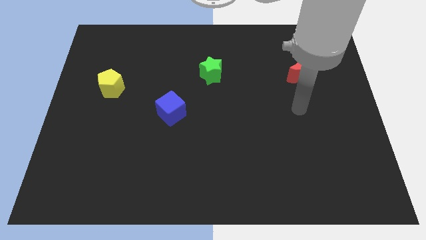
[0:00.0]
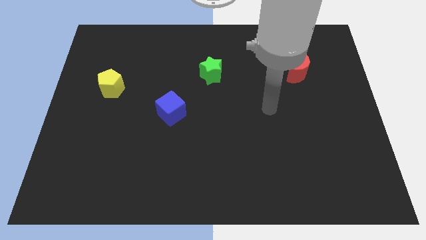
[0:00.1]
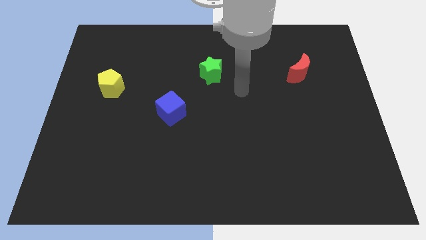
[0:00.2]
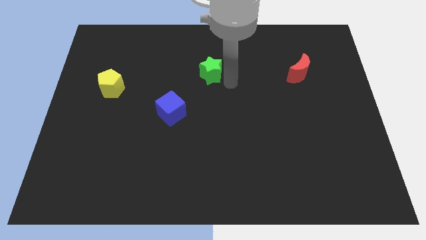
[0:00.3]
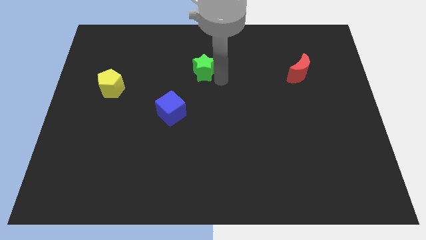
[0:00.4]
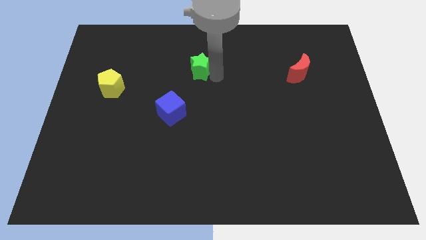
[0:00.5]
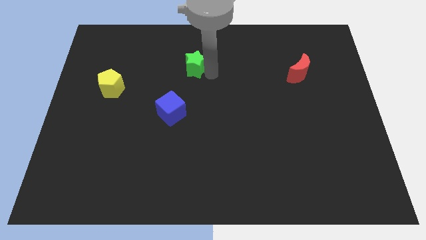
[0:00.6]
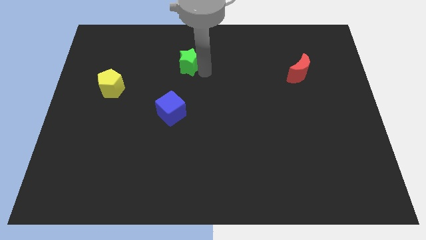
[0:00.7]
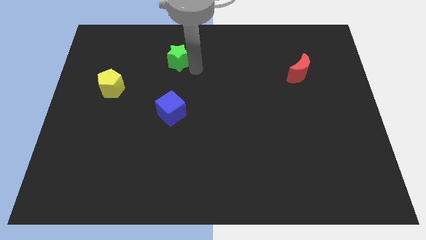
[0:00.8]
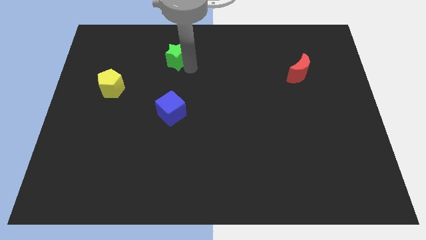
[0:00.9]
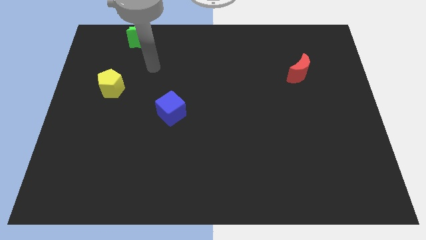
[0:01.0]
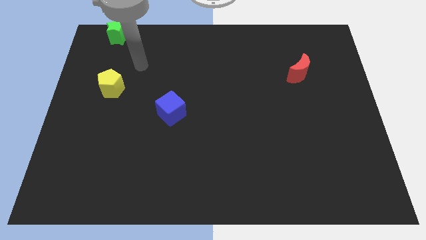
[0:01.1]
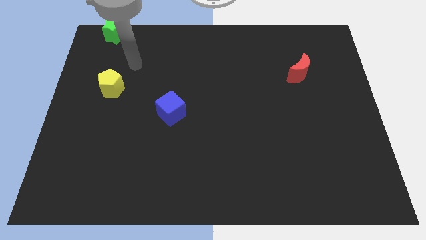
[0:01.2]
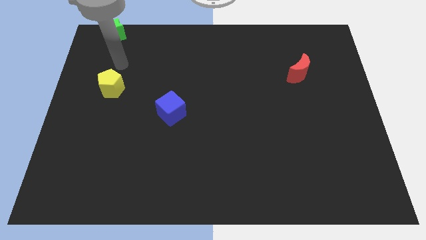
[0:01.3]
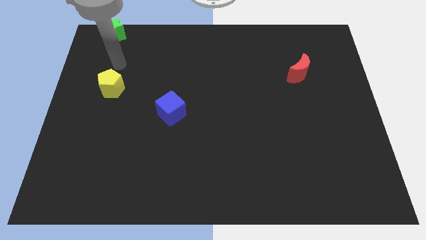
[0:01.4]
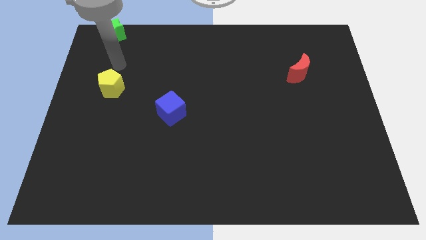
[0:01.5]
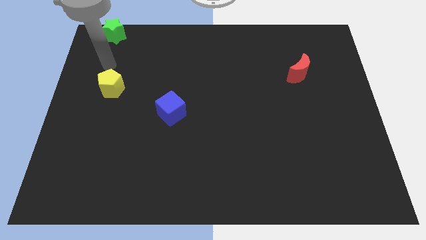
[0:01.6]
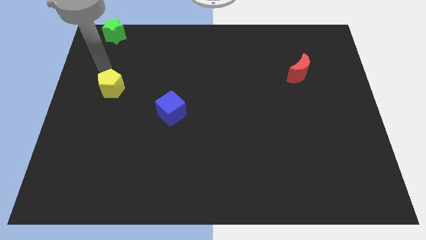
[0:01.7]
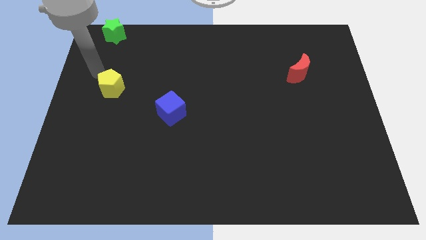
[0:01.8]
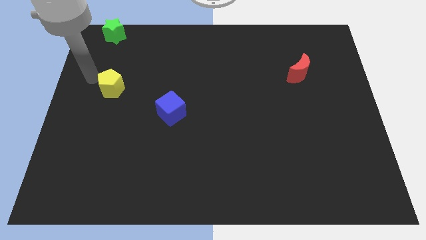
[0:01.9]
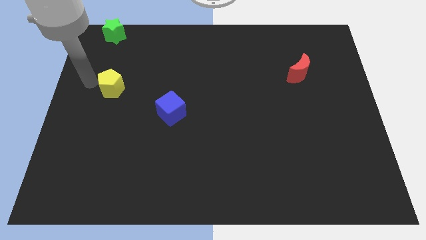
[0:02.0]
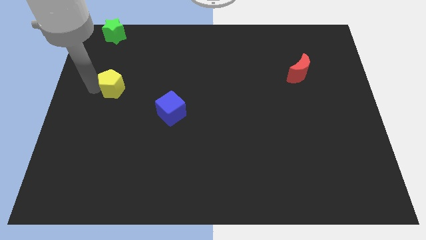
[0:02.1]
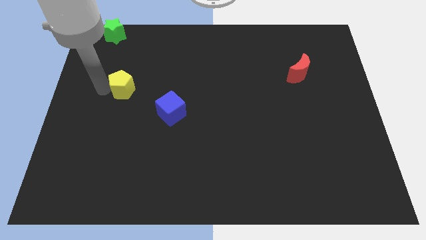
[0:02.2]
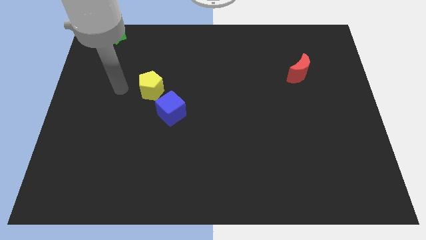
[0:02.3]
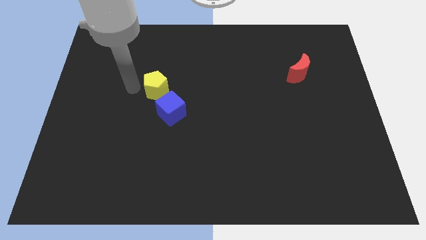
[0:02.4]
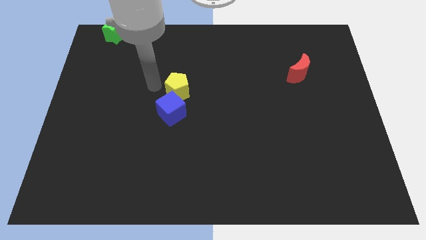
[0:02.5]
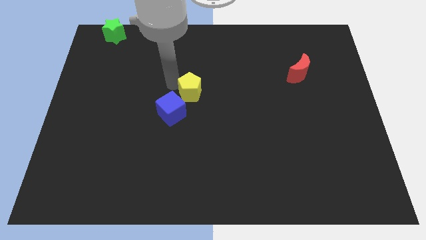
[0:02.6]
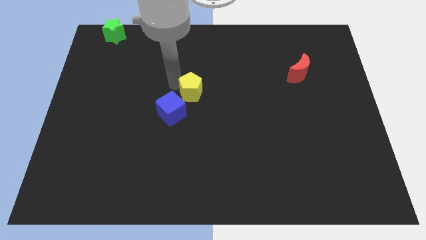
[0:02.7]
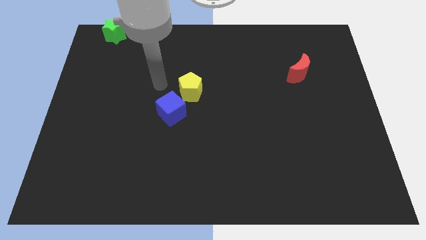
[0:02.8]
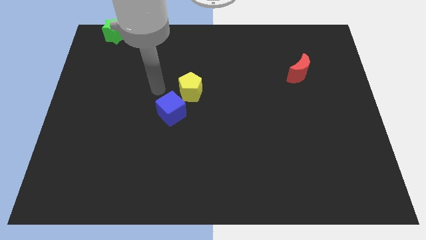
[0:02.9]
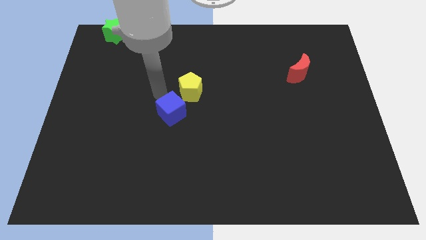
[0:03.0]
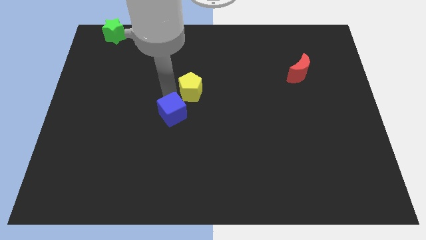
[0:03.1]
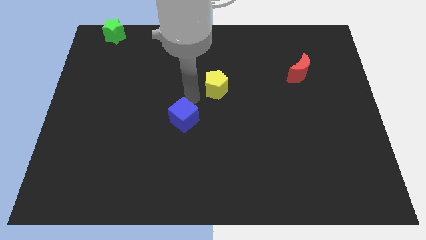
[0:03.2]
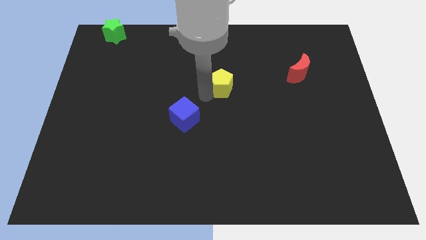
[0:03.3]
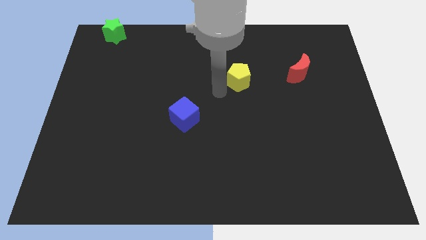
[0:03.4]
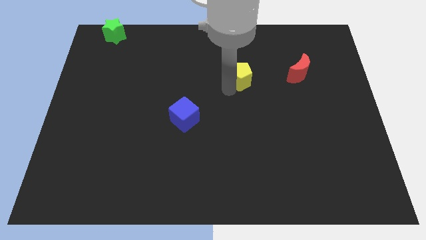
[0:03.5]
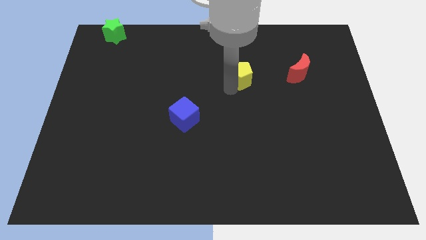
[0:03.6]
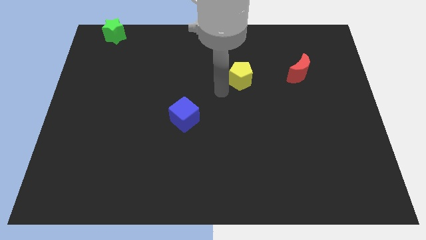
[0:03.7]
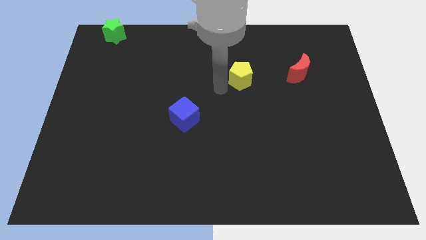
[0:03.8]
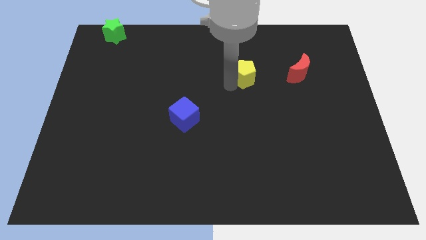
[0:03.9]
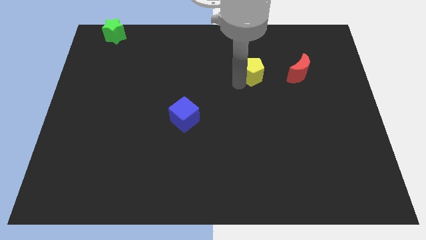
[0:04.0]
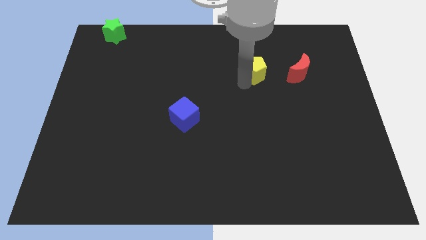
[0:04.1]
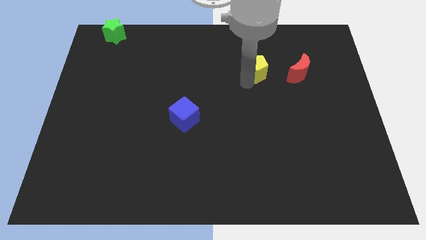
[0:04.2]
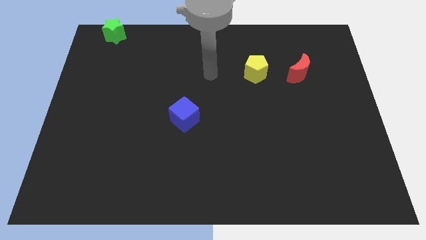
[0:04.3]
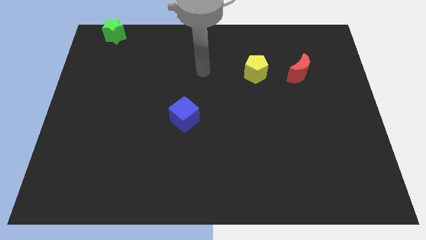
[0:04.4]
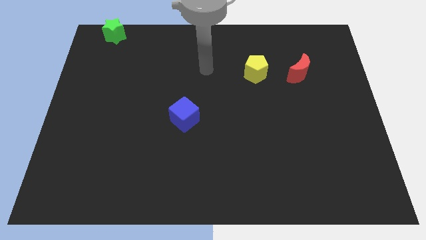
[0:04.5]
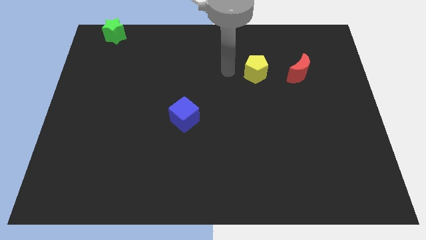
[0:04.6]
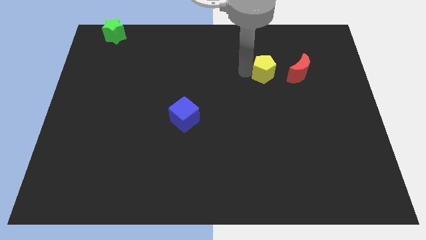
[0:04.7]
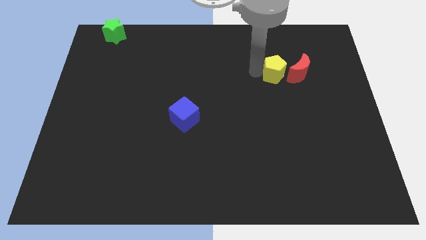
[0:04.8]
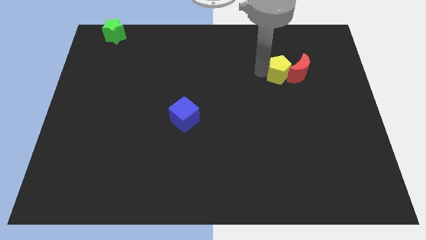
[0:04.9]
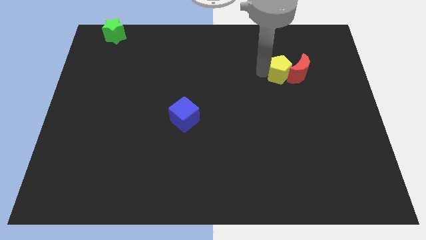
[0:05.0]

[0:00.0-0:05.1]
slide the pentagon to the red block

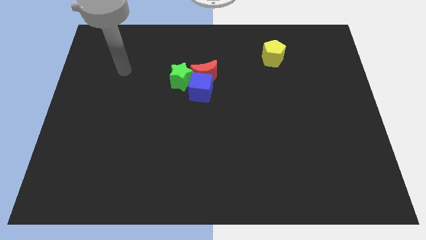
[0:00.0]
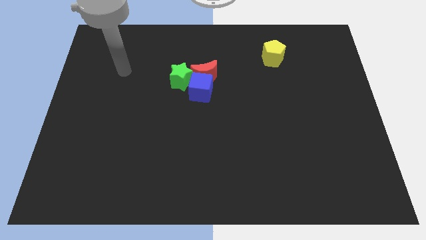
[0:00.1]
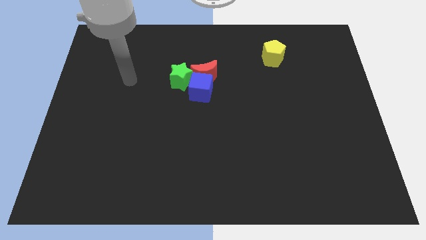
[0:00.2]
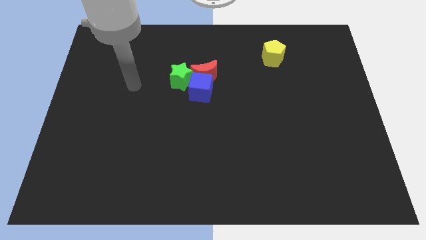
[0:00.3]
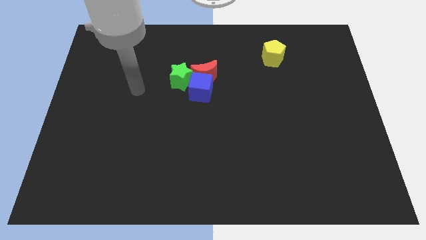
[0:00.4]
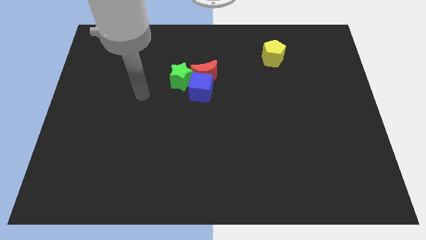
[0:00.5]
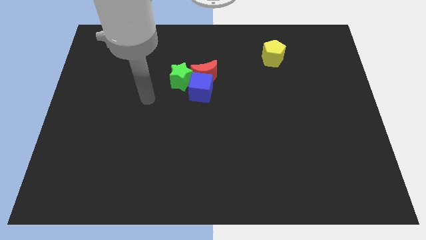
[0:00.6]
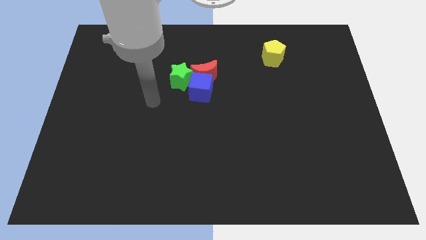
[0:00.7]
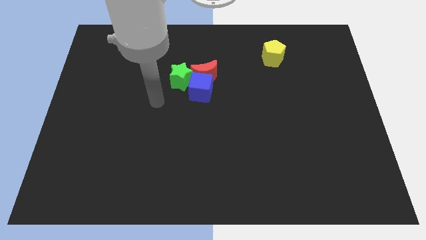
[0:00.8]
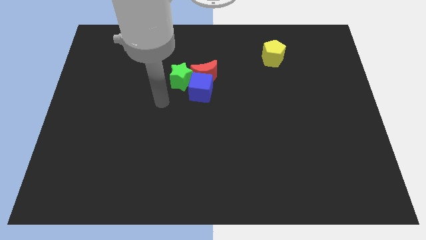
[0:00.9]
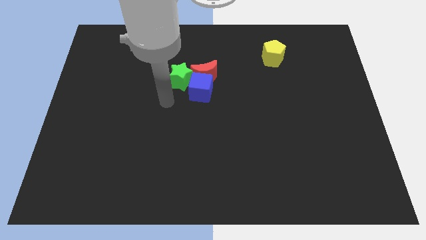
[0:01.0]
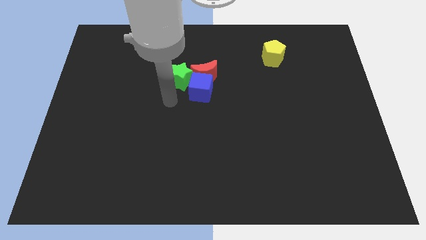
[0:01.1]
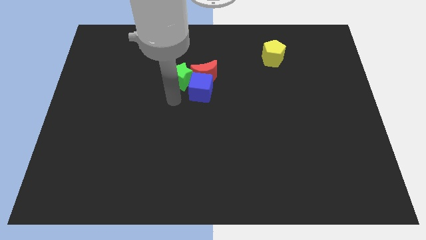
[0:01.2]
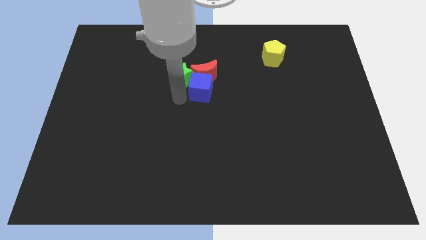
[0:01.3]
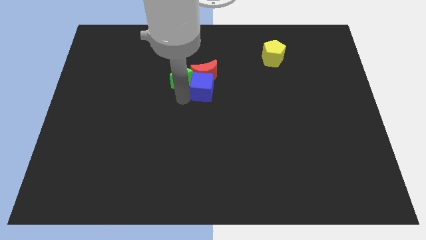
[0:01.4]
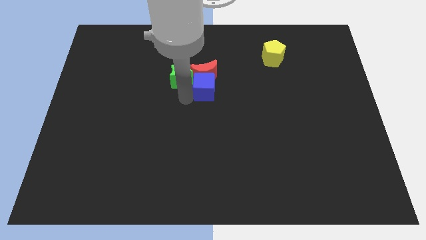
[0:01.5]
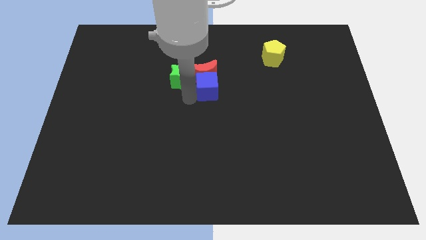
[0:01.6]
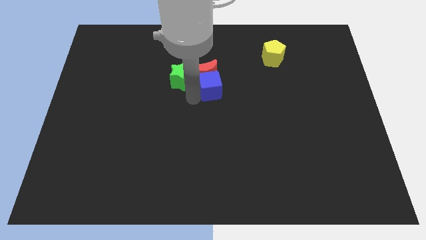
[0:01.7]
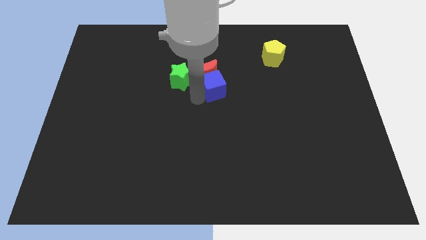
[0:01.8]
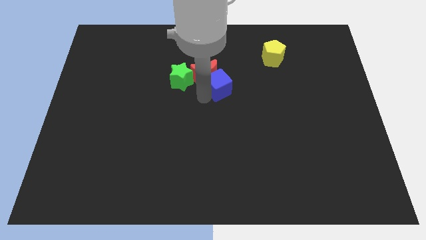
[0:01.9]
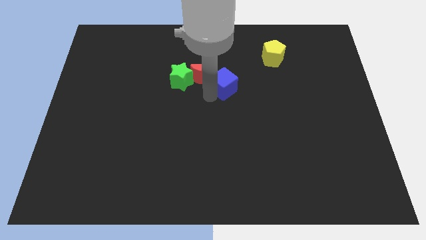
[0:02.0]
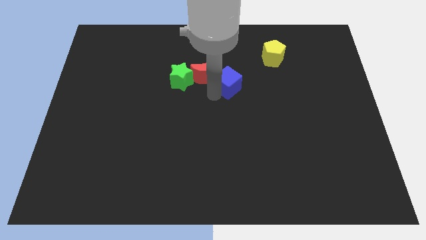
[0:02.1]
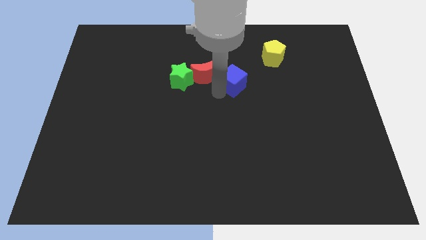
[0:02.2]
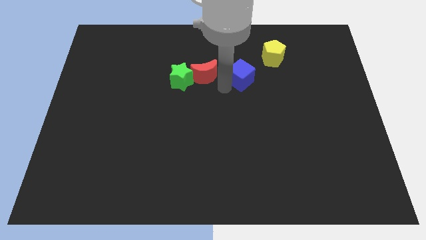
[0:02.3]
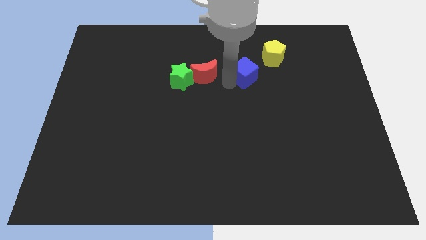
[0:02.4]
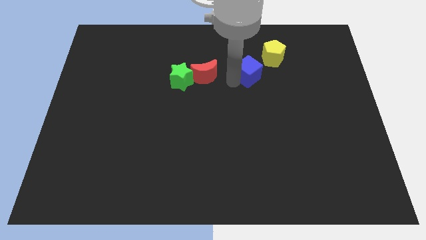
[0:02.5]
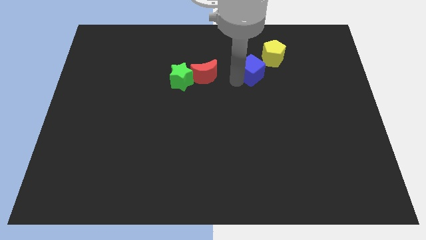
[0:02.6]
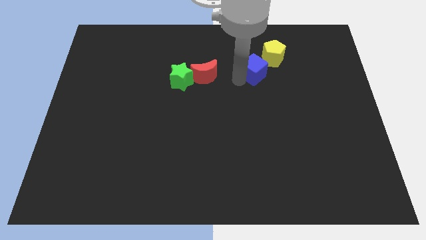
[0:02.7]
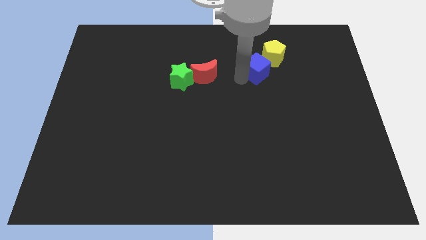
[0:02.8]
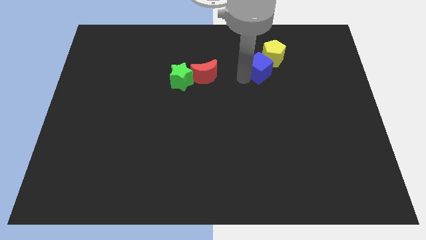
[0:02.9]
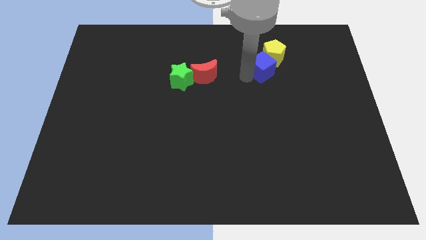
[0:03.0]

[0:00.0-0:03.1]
put the cube close to the pentagon

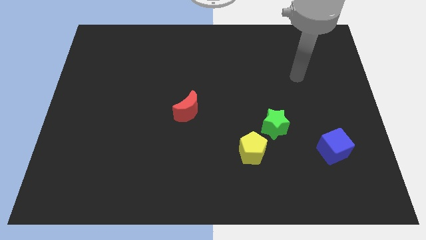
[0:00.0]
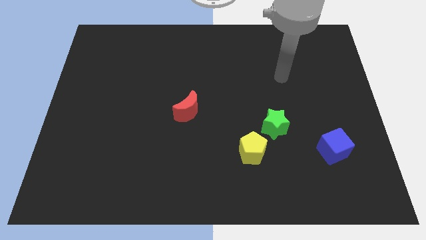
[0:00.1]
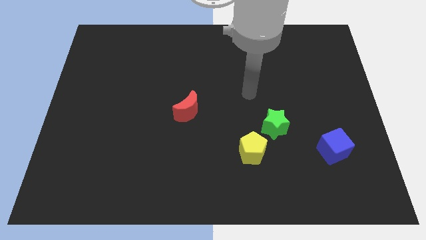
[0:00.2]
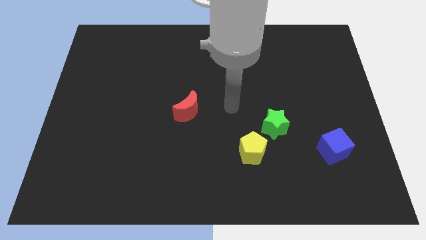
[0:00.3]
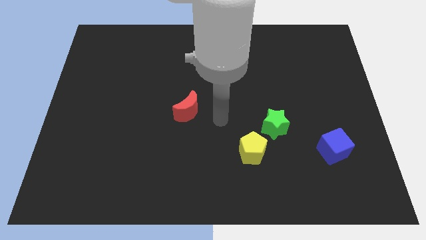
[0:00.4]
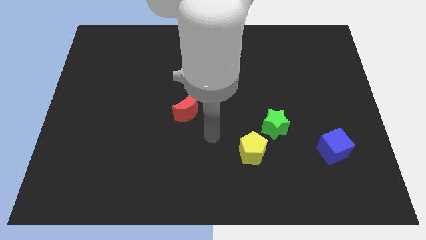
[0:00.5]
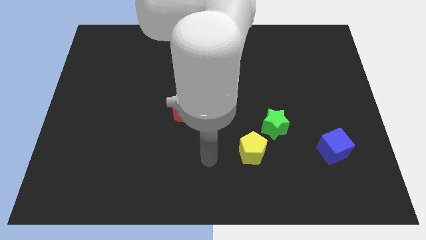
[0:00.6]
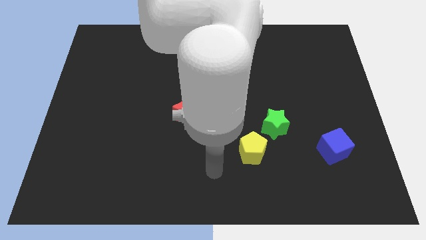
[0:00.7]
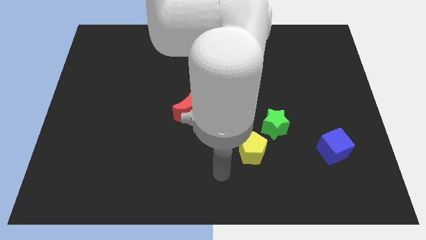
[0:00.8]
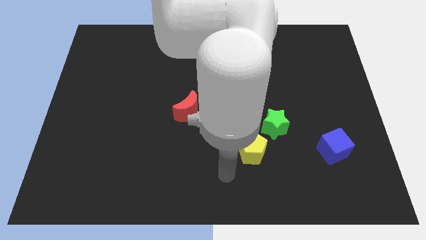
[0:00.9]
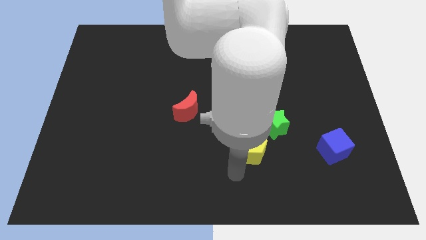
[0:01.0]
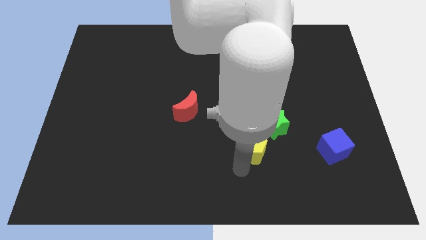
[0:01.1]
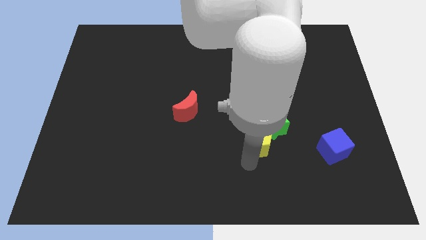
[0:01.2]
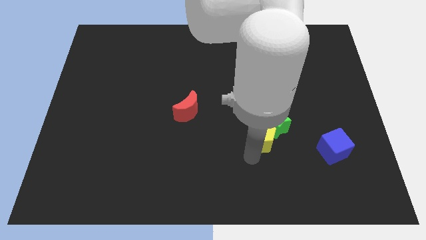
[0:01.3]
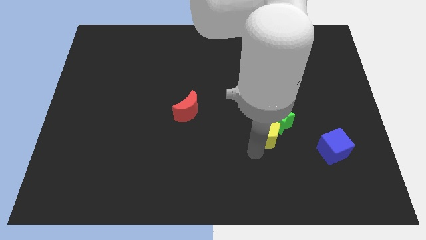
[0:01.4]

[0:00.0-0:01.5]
move the yellow block towards the star
